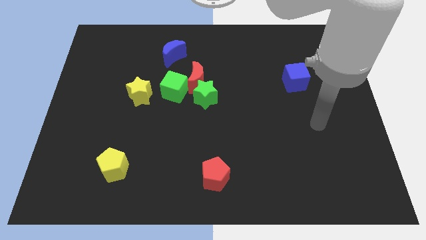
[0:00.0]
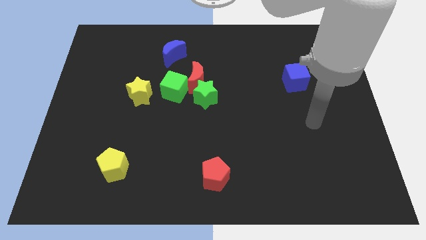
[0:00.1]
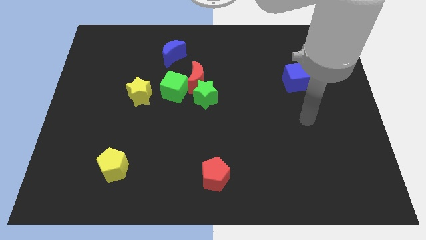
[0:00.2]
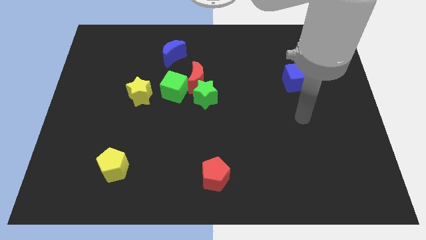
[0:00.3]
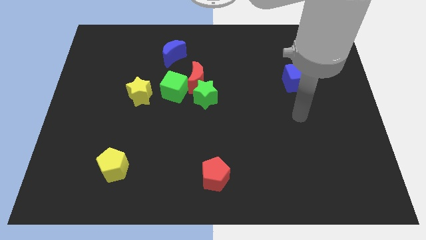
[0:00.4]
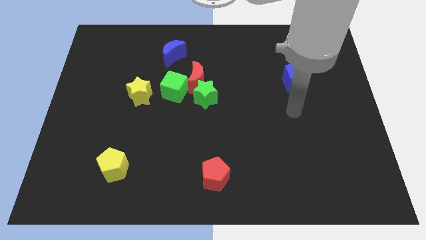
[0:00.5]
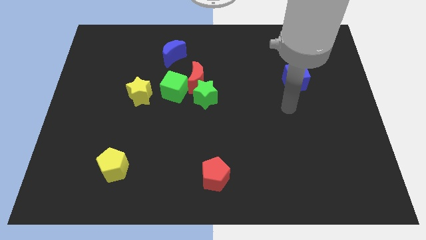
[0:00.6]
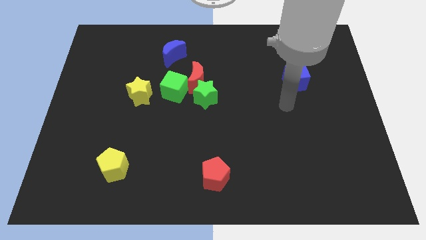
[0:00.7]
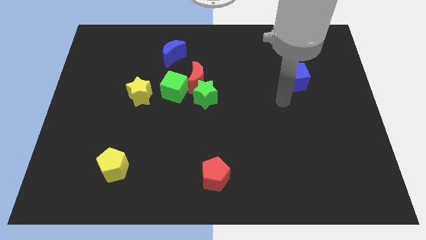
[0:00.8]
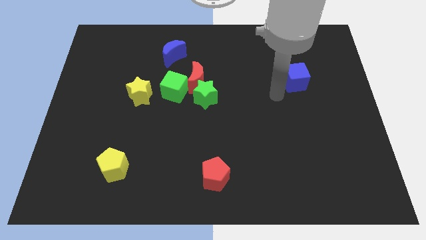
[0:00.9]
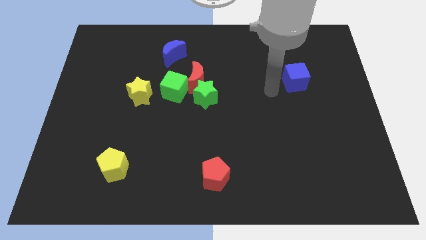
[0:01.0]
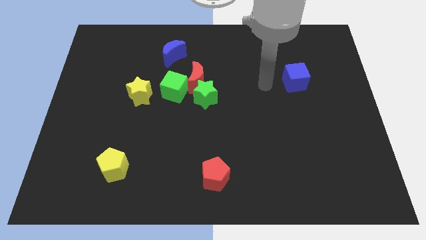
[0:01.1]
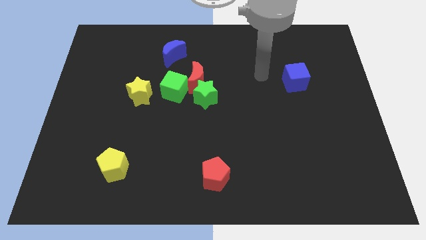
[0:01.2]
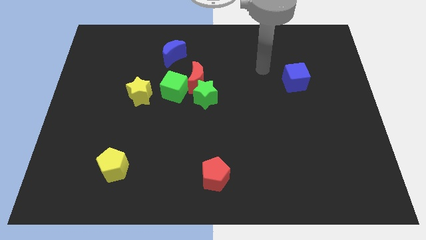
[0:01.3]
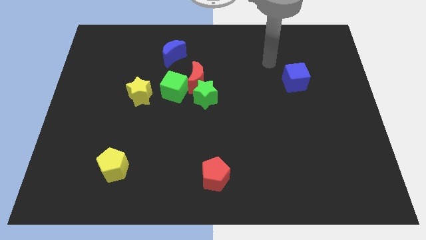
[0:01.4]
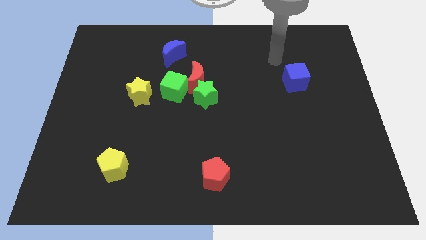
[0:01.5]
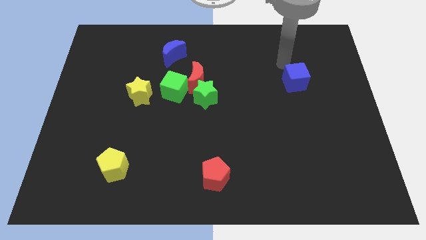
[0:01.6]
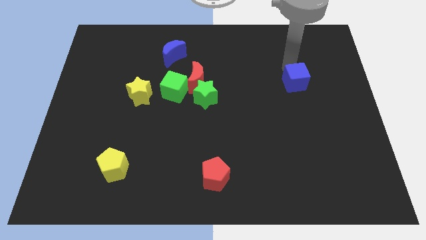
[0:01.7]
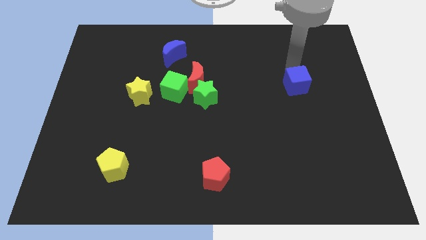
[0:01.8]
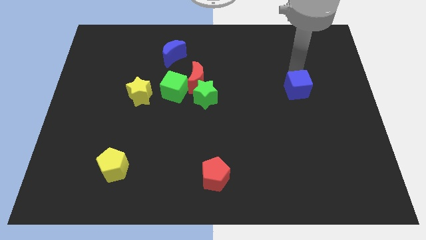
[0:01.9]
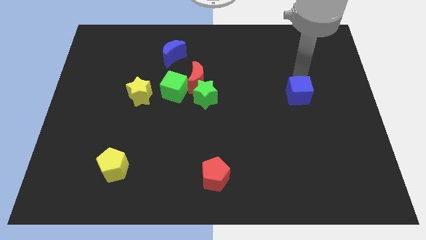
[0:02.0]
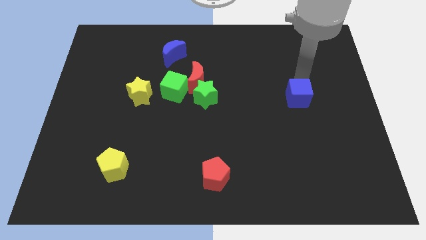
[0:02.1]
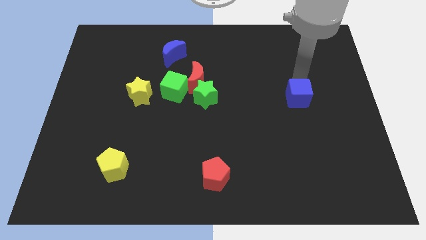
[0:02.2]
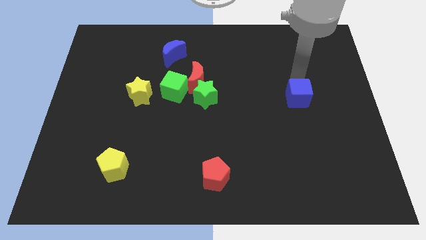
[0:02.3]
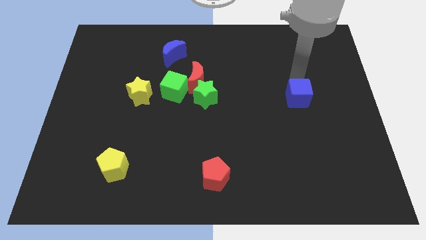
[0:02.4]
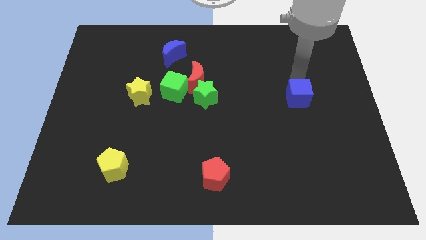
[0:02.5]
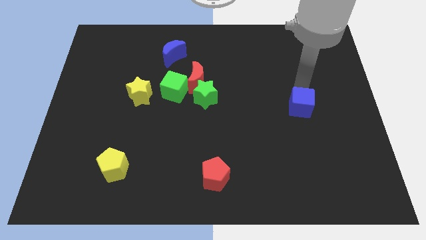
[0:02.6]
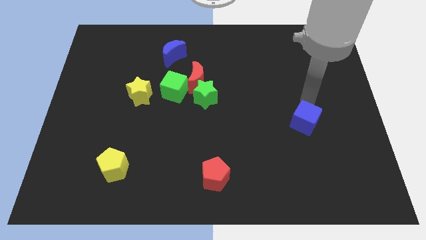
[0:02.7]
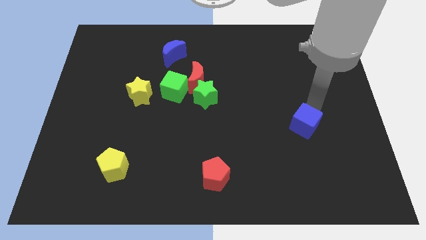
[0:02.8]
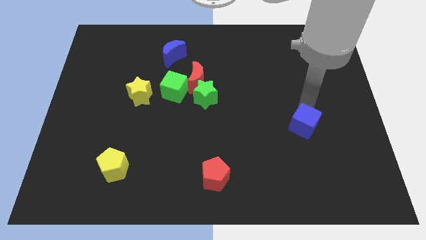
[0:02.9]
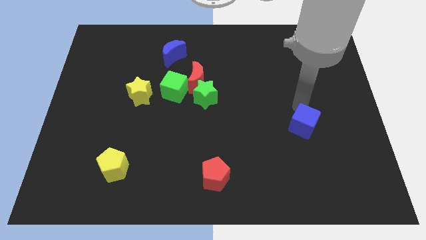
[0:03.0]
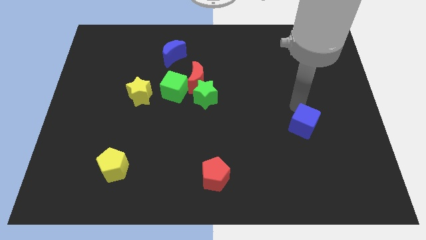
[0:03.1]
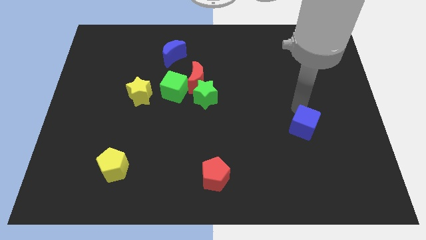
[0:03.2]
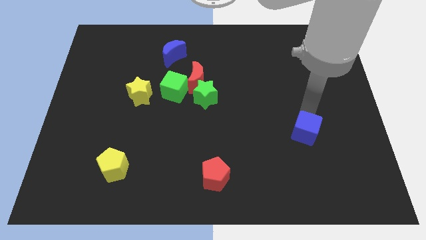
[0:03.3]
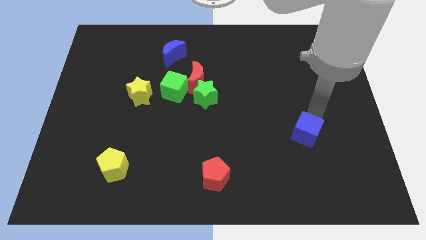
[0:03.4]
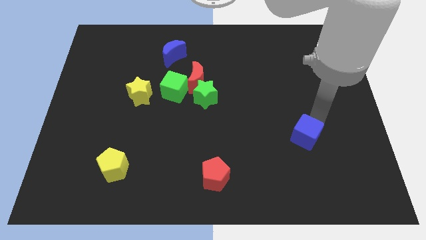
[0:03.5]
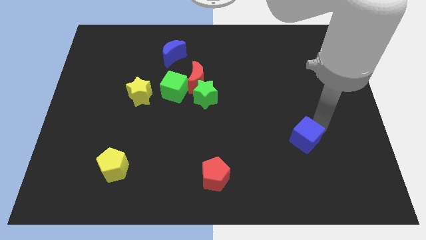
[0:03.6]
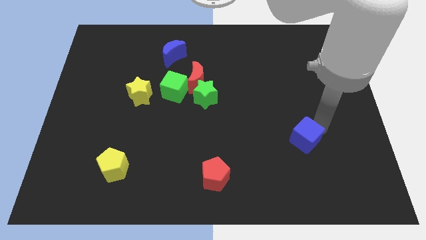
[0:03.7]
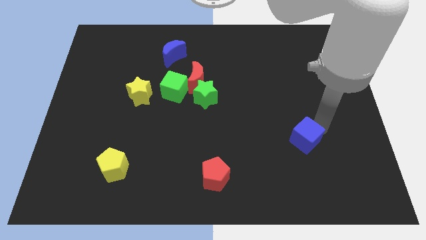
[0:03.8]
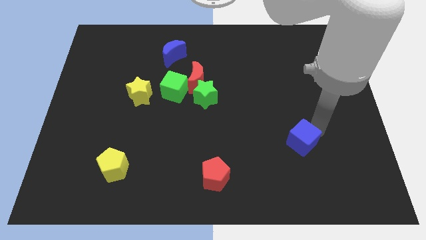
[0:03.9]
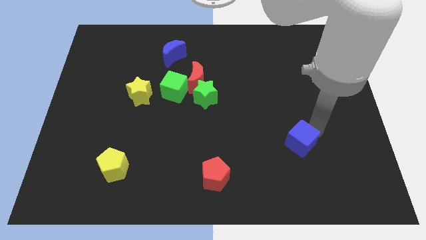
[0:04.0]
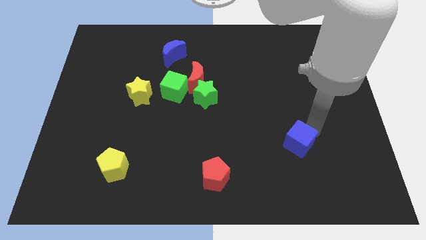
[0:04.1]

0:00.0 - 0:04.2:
push the blue cube vertical right to the red pentagon

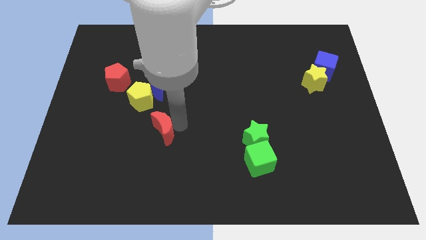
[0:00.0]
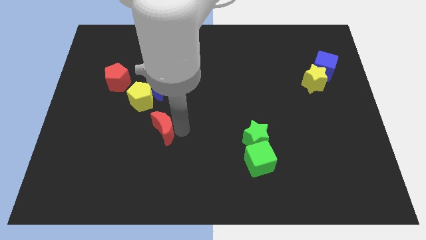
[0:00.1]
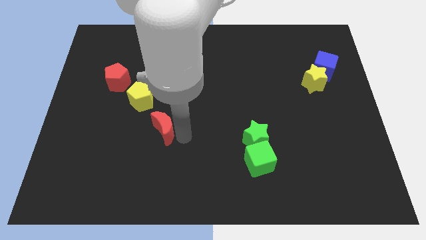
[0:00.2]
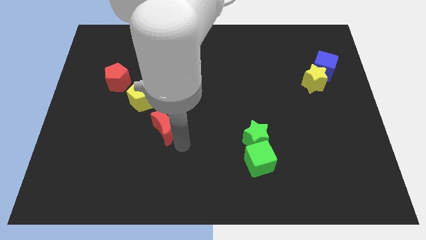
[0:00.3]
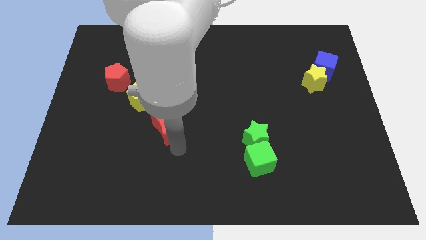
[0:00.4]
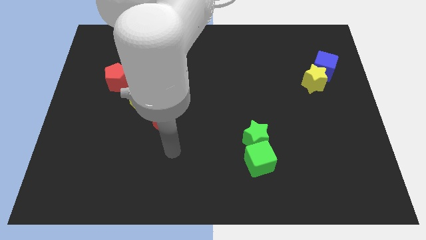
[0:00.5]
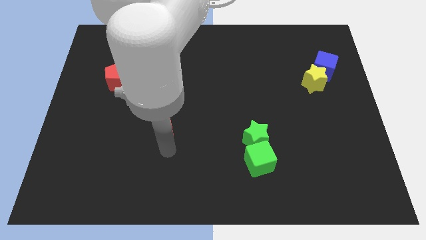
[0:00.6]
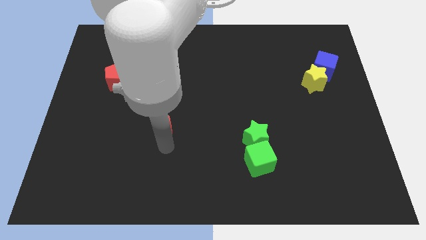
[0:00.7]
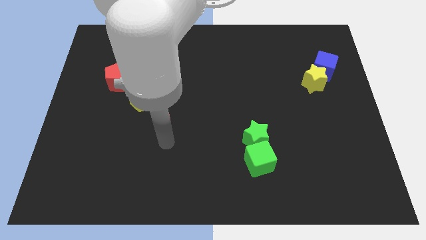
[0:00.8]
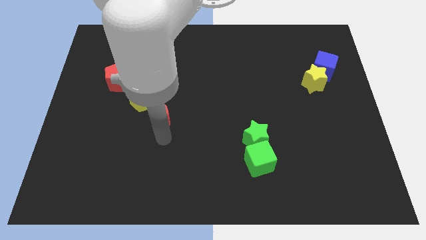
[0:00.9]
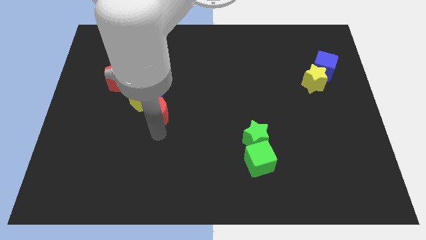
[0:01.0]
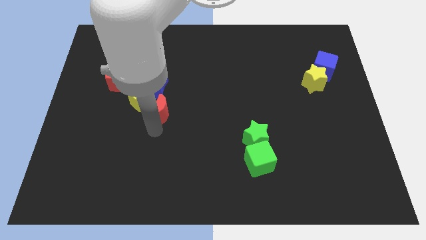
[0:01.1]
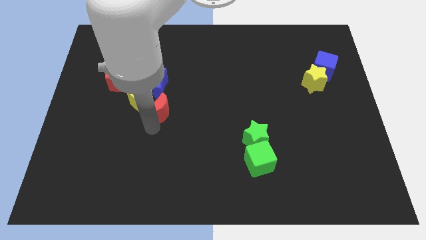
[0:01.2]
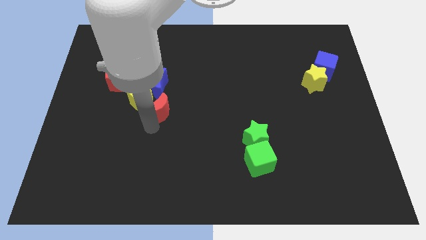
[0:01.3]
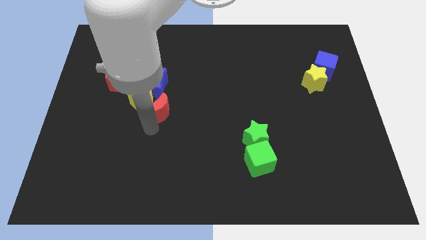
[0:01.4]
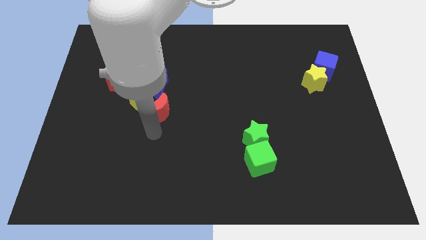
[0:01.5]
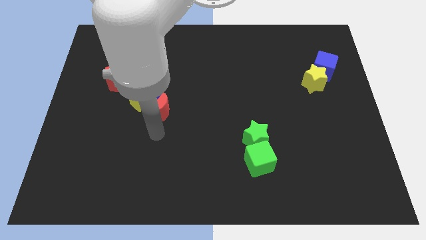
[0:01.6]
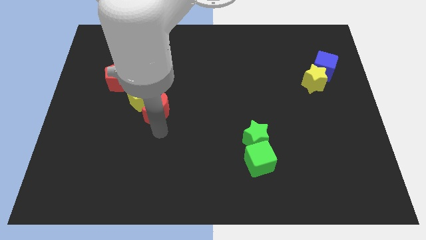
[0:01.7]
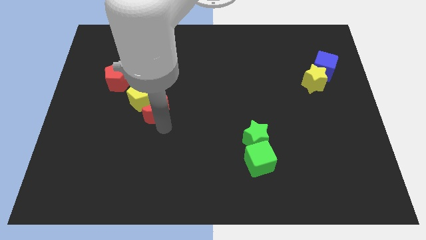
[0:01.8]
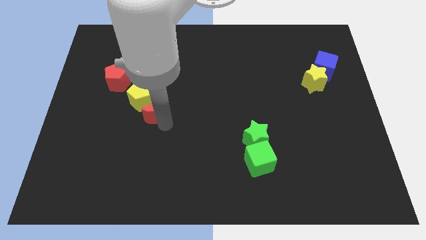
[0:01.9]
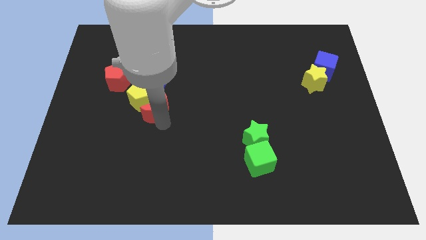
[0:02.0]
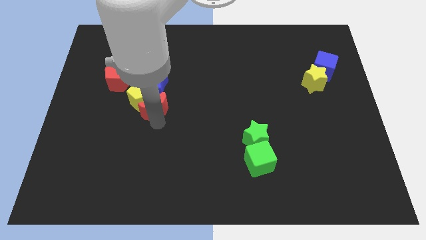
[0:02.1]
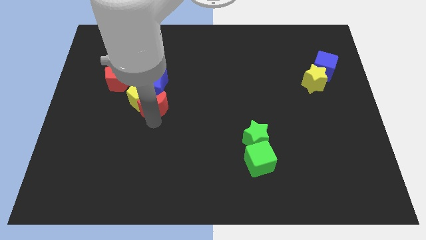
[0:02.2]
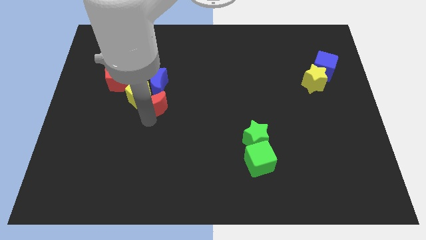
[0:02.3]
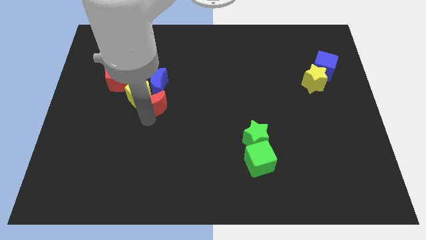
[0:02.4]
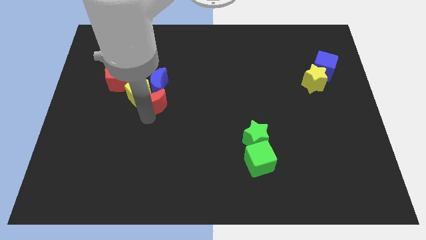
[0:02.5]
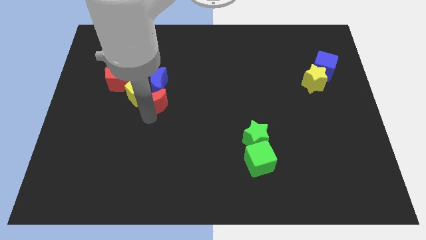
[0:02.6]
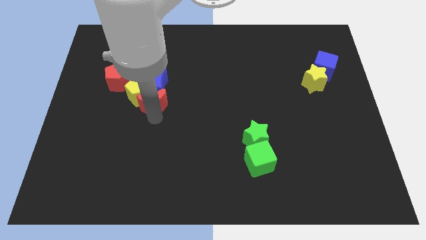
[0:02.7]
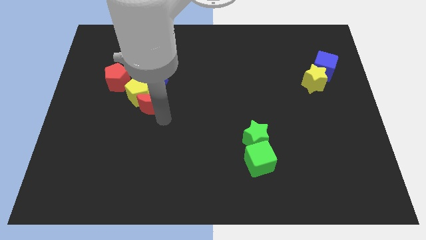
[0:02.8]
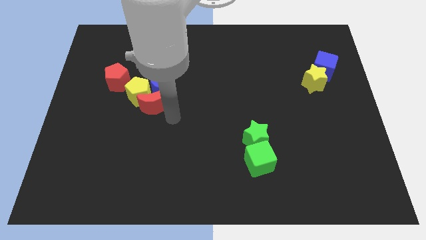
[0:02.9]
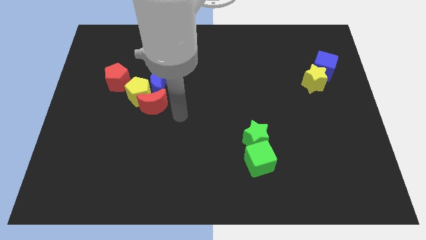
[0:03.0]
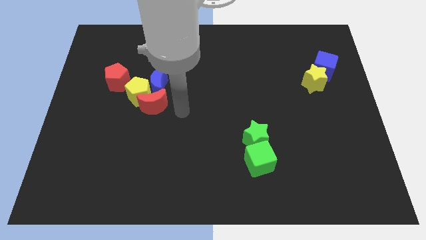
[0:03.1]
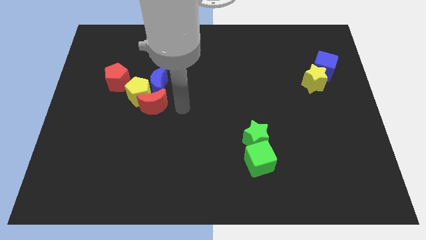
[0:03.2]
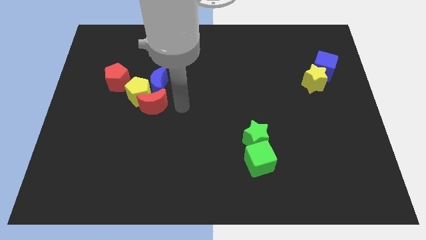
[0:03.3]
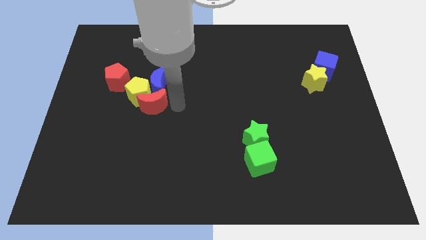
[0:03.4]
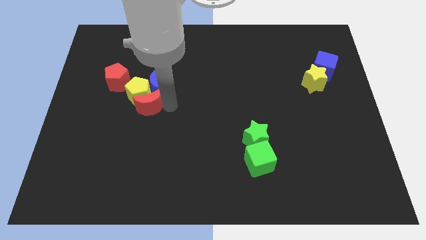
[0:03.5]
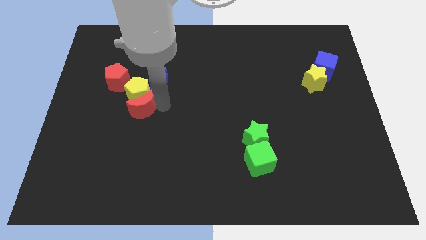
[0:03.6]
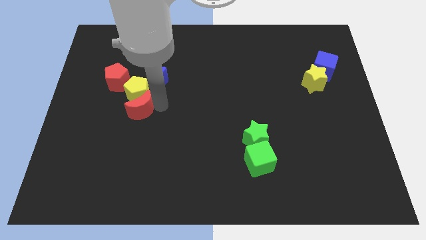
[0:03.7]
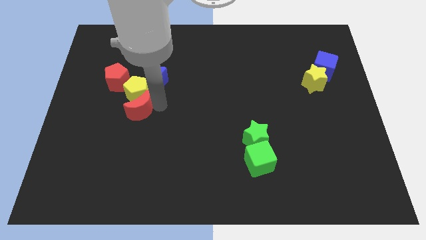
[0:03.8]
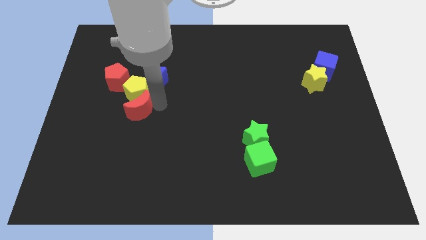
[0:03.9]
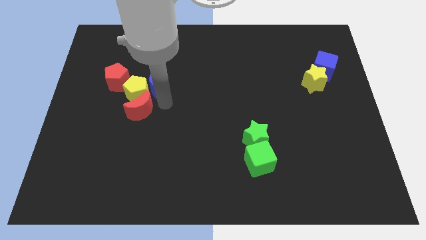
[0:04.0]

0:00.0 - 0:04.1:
put the red crescent at the bottom of the yellow pentagon

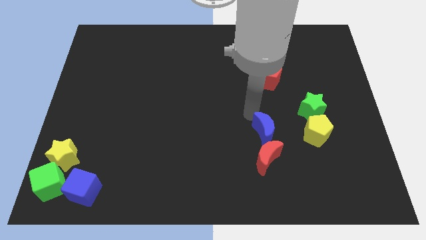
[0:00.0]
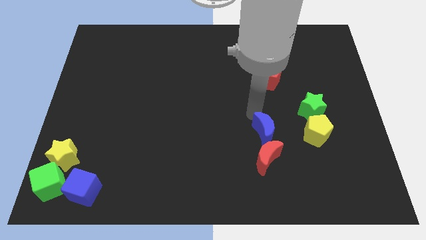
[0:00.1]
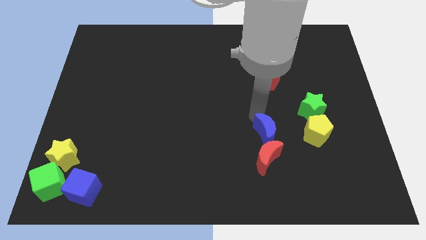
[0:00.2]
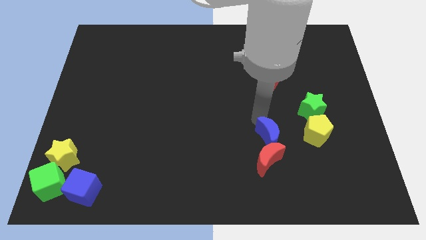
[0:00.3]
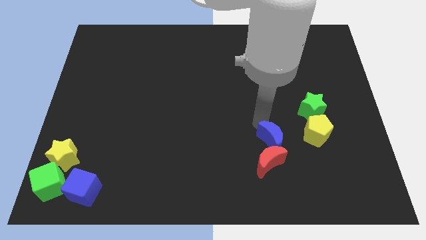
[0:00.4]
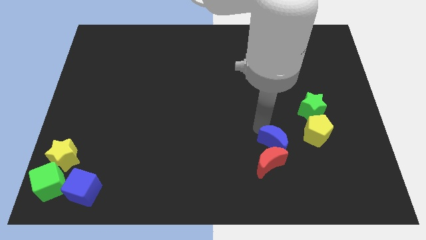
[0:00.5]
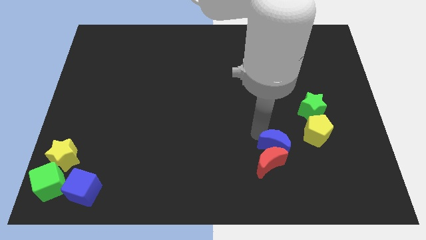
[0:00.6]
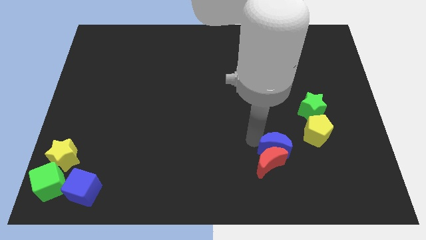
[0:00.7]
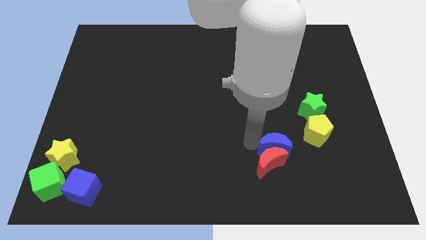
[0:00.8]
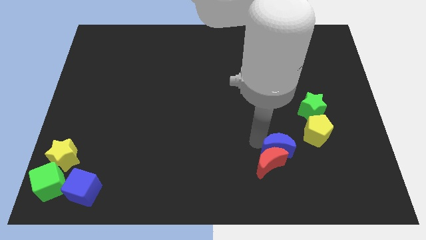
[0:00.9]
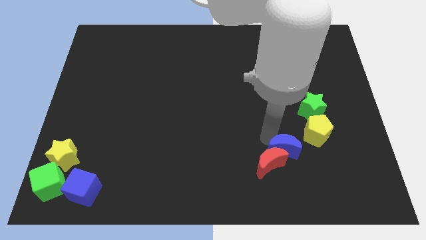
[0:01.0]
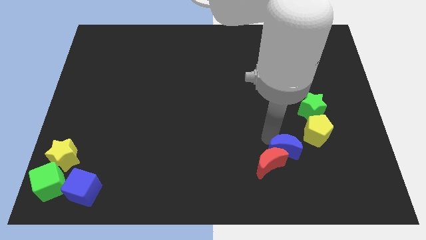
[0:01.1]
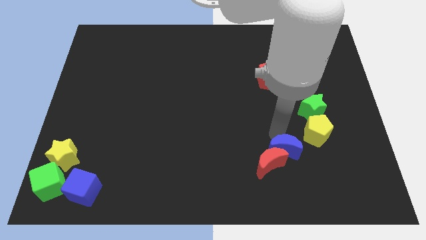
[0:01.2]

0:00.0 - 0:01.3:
push blue moon into the red moon
